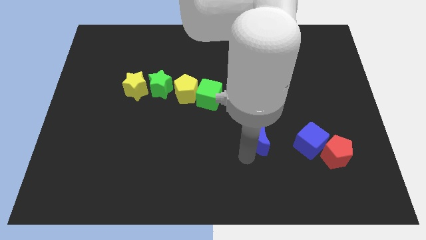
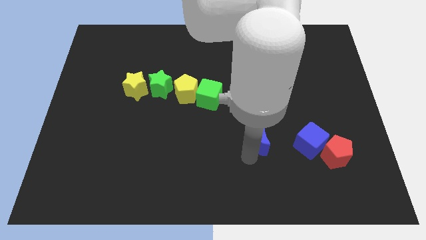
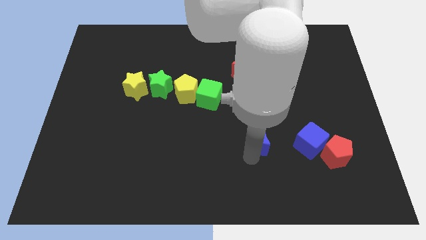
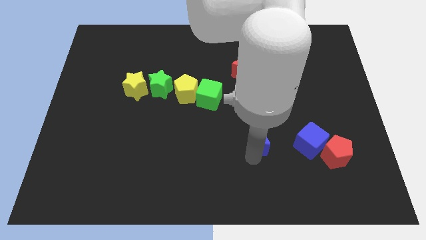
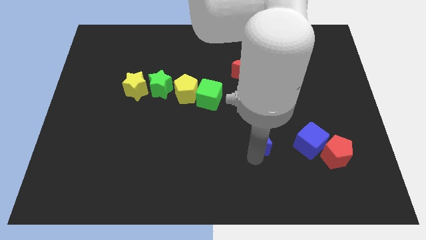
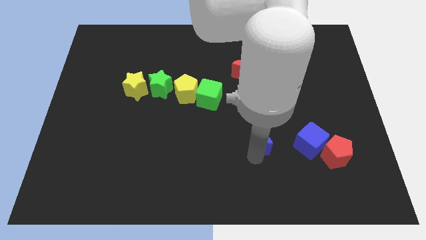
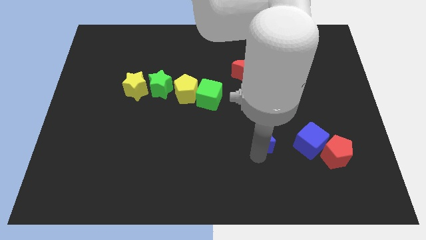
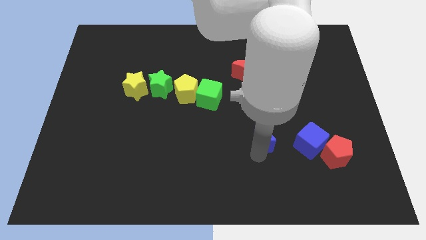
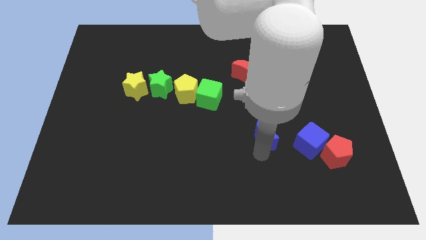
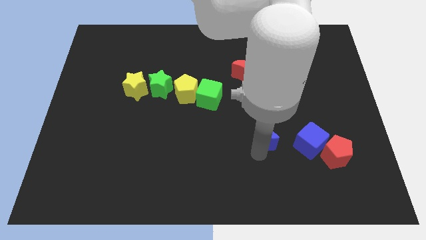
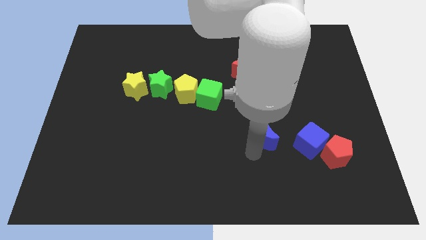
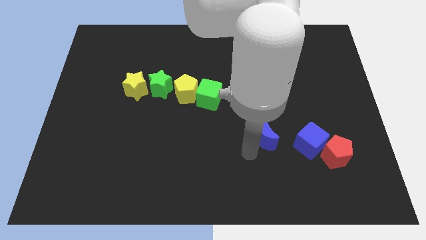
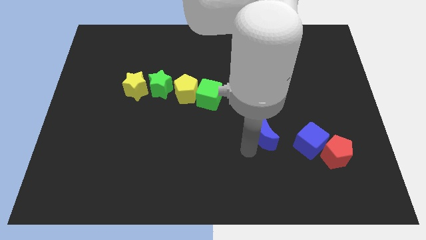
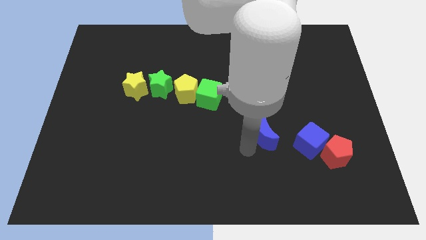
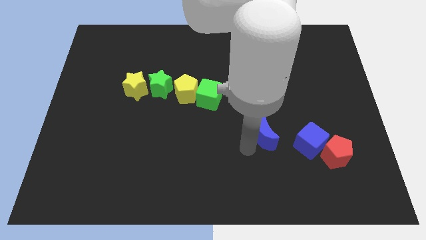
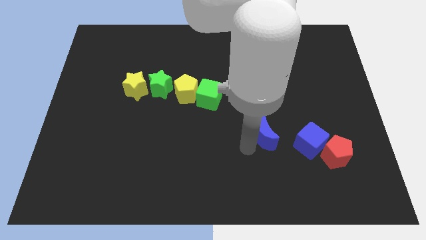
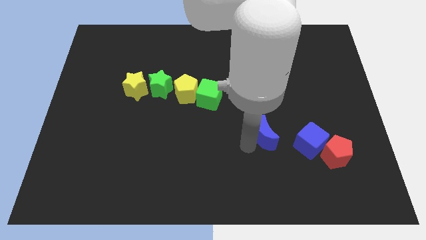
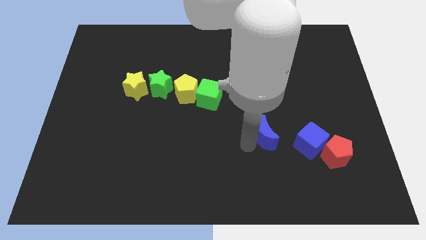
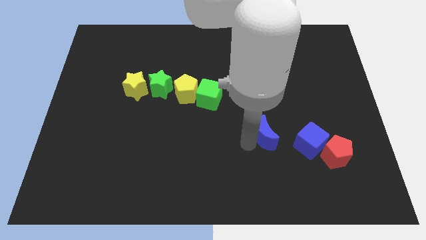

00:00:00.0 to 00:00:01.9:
move the blue crescent slightly towards the left side of the blue cube

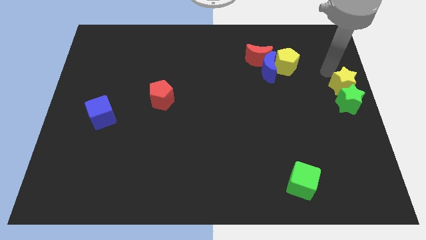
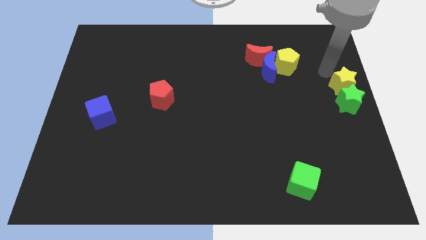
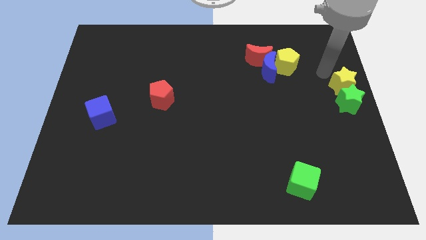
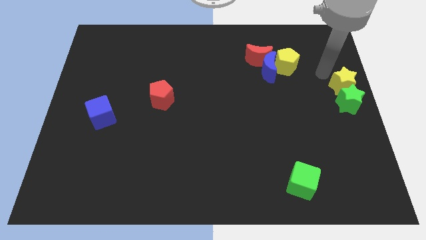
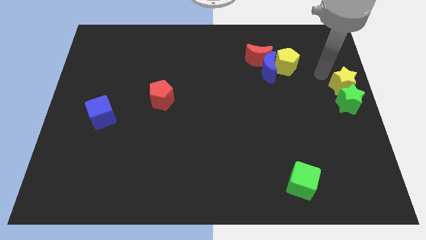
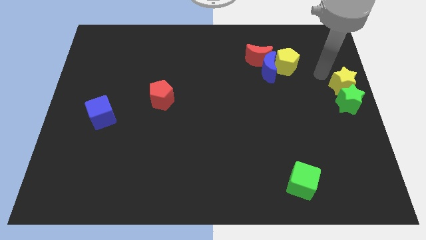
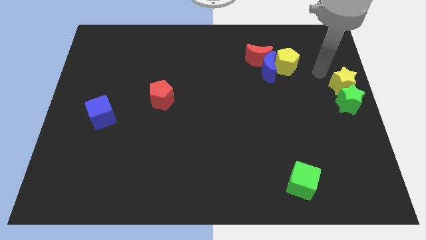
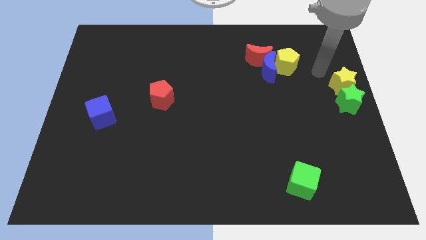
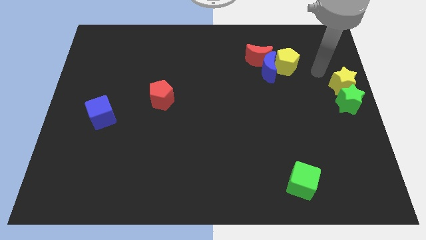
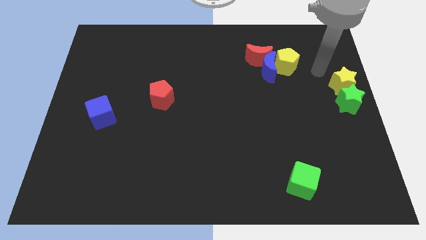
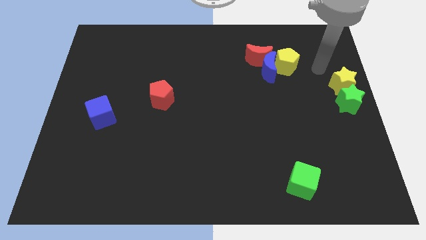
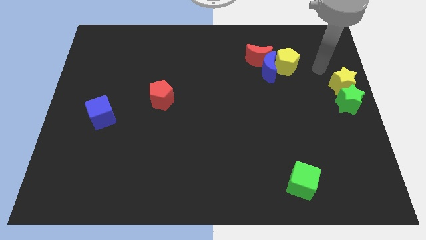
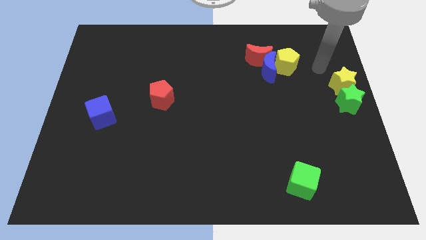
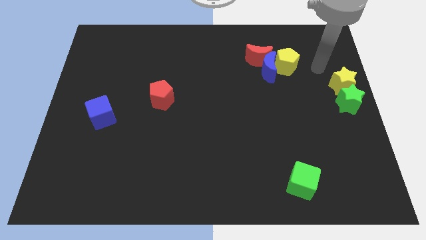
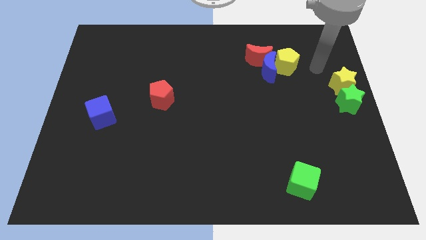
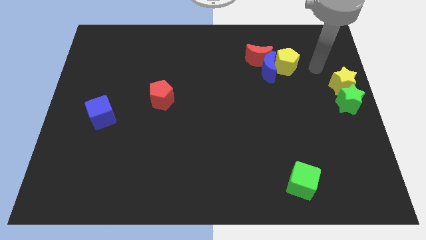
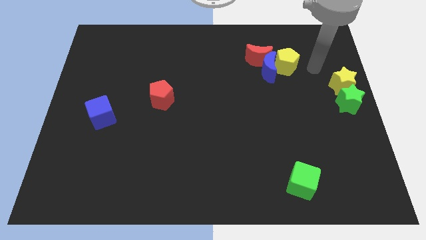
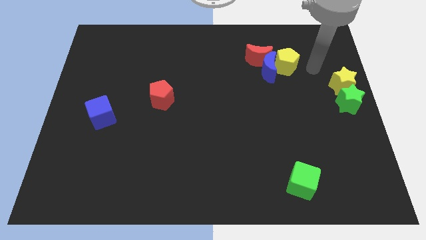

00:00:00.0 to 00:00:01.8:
point your arm at the right side of the yellow pentagon

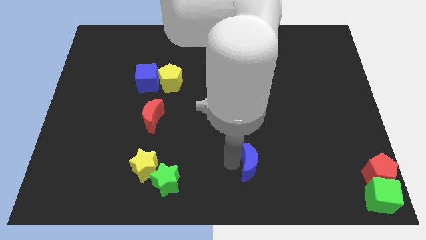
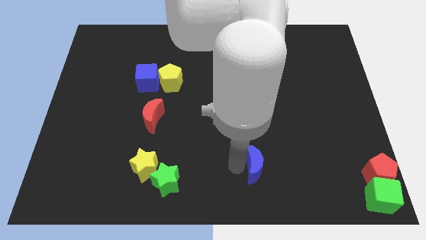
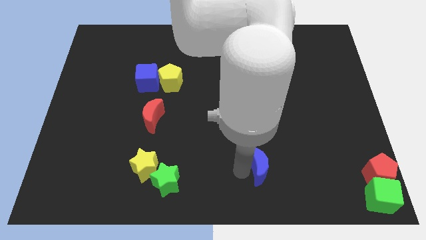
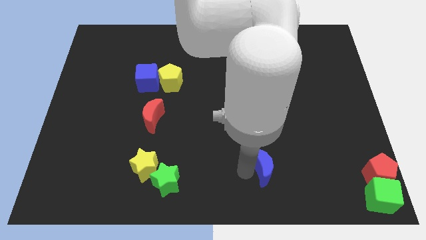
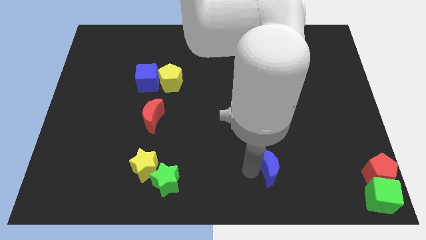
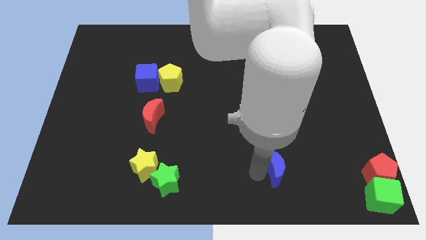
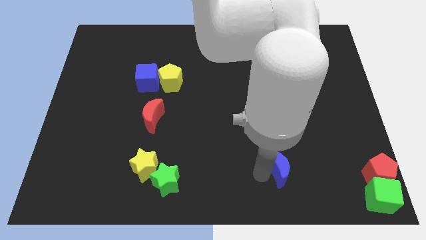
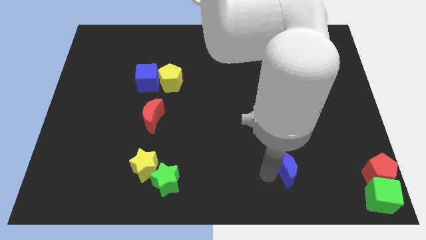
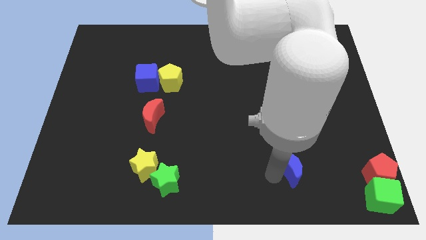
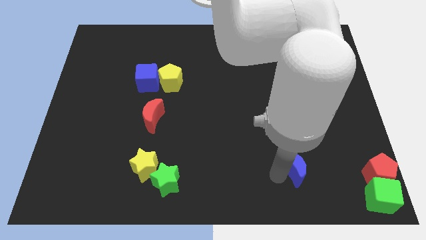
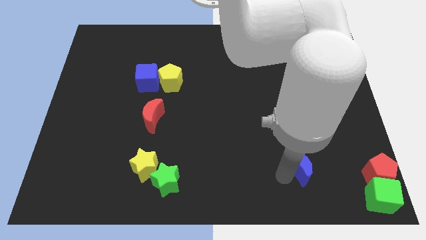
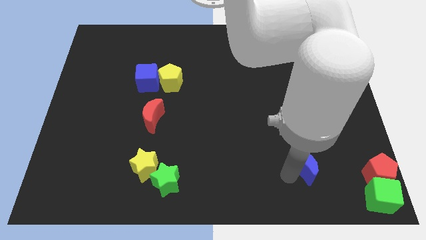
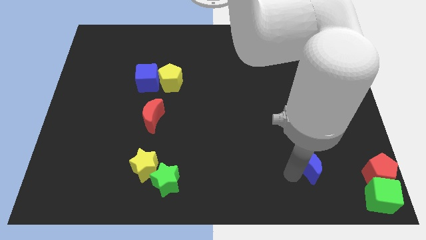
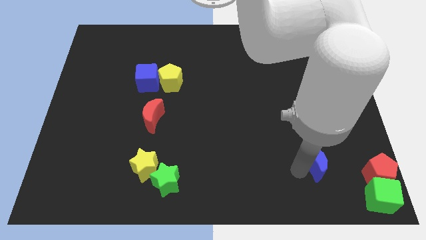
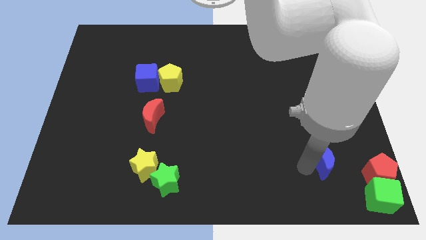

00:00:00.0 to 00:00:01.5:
move the blue moon towards the right side

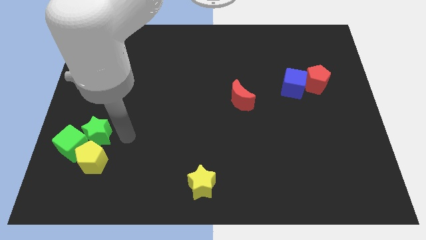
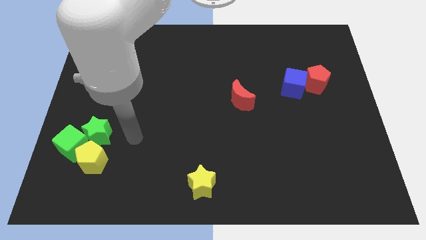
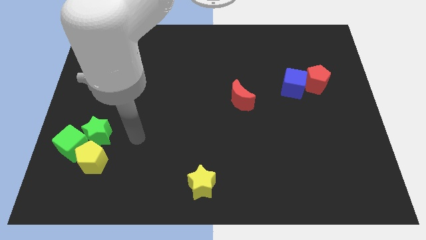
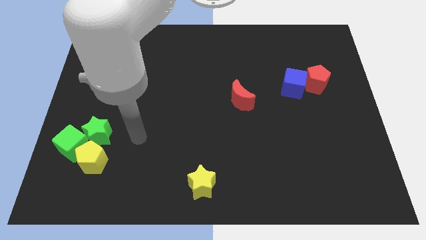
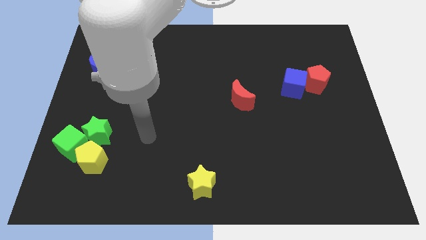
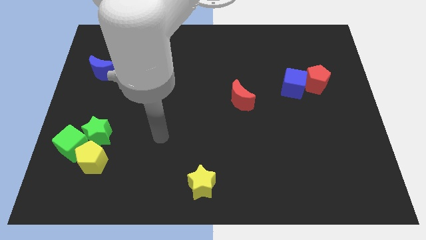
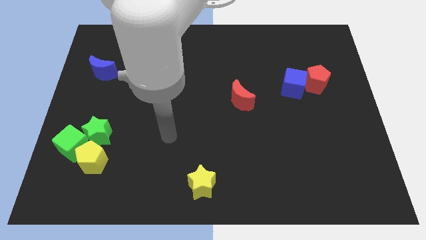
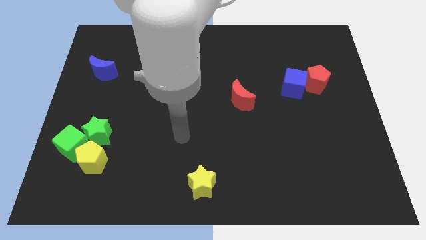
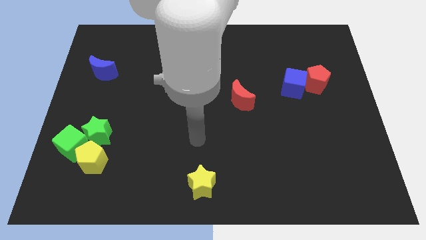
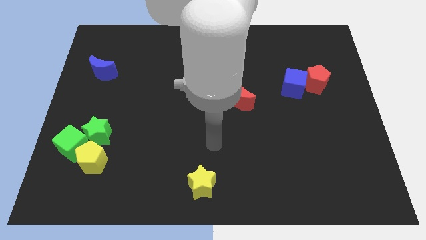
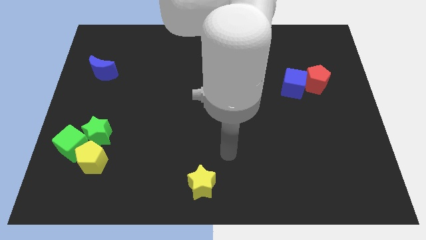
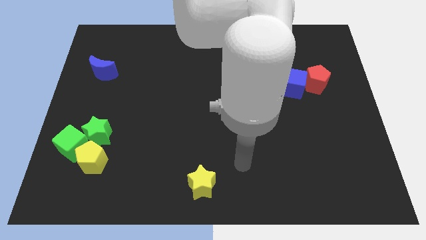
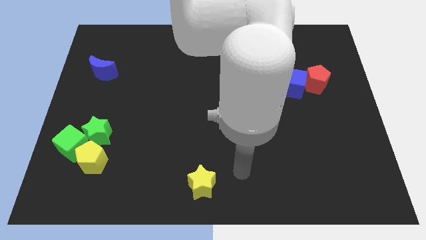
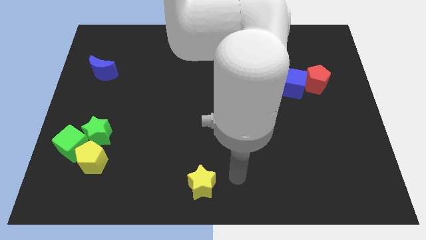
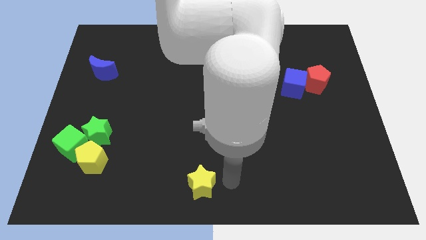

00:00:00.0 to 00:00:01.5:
point your arm at the right of the yellow star

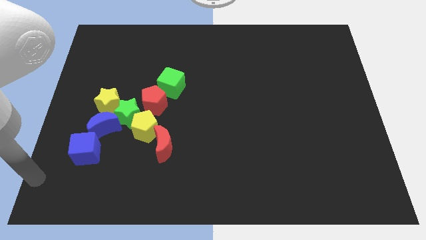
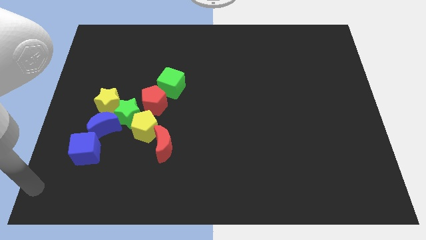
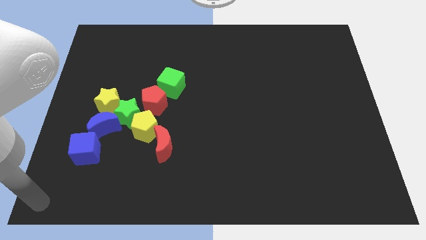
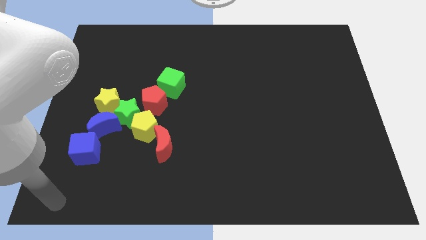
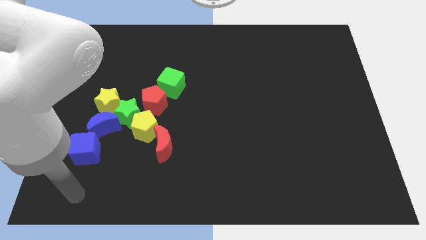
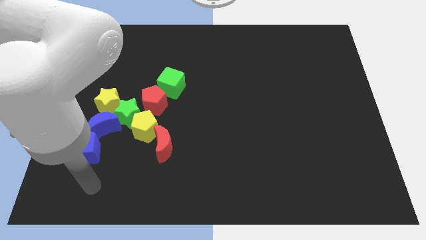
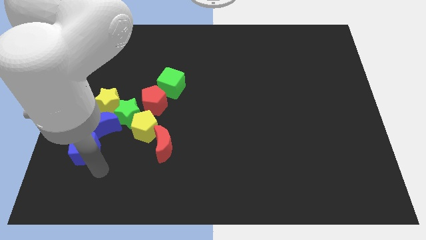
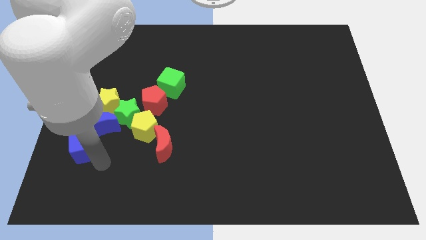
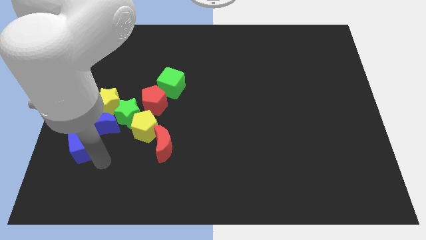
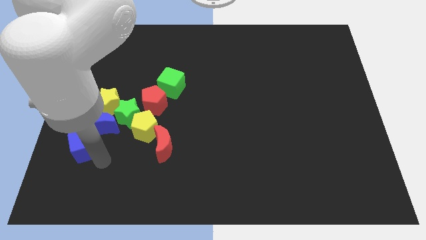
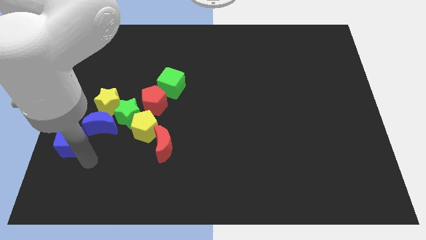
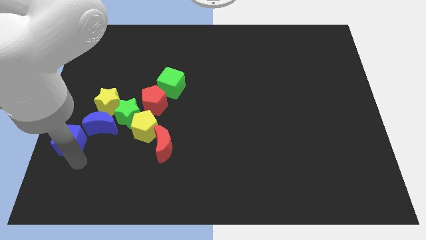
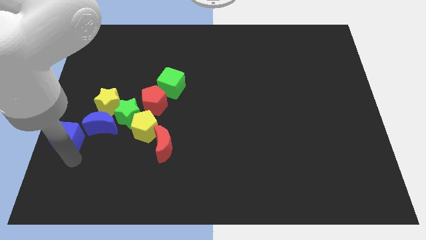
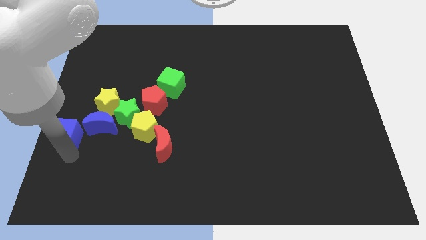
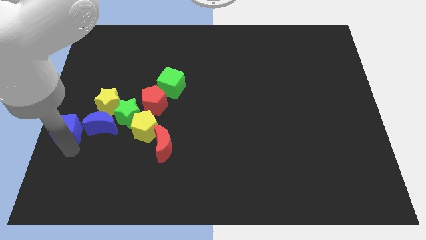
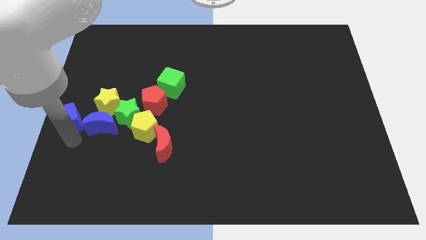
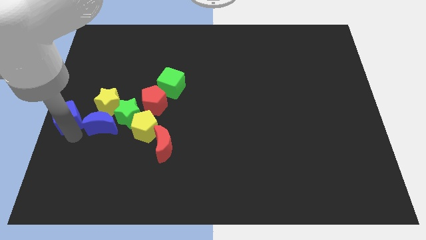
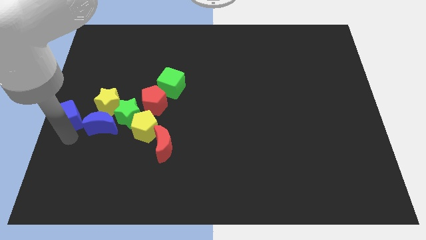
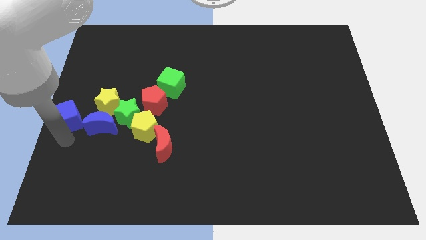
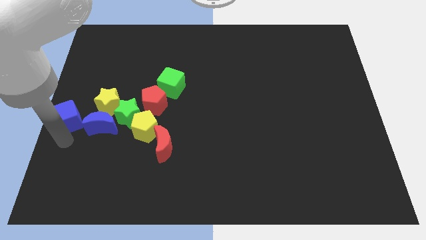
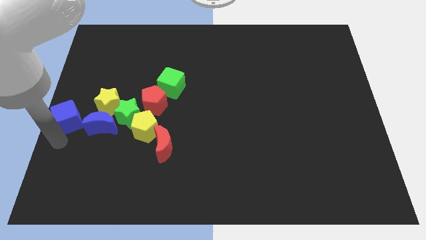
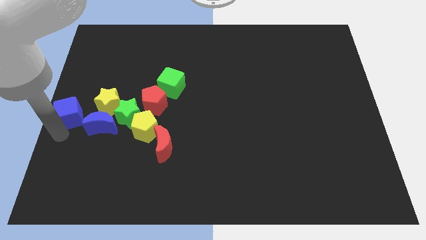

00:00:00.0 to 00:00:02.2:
put blue cube to the center left
